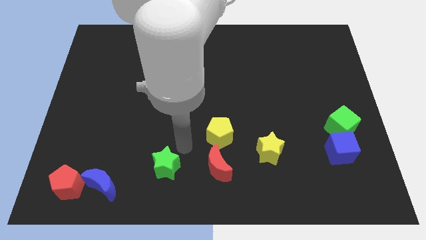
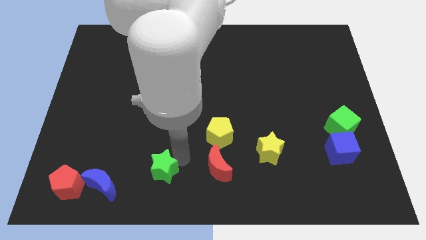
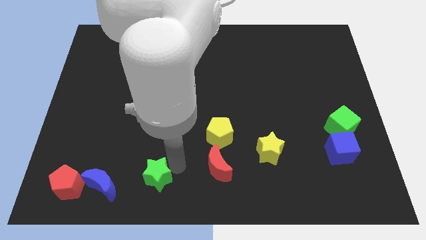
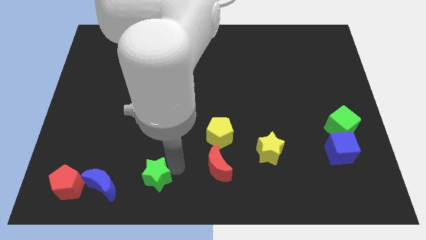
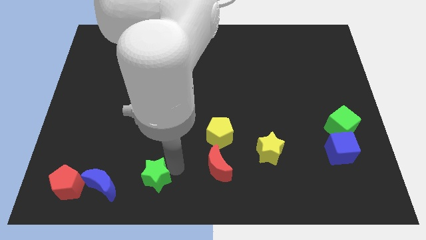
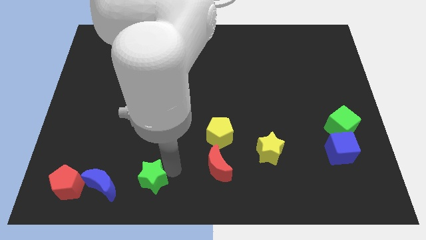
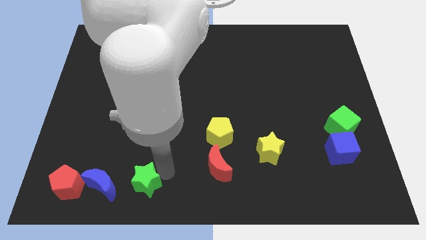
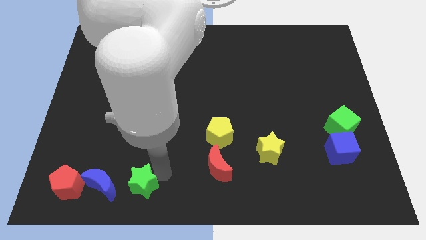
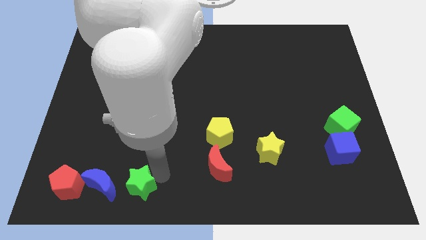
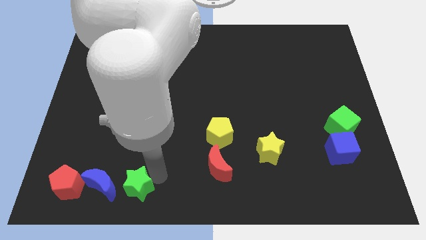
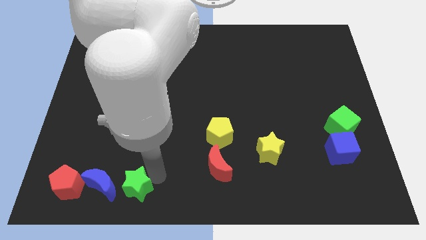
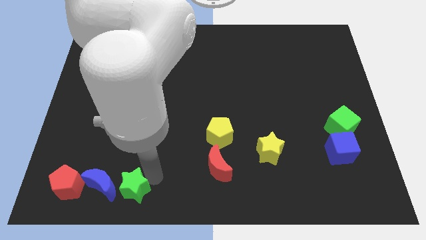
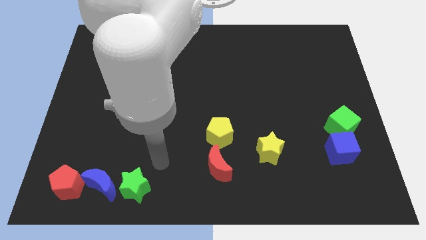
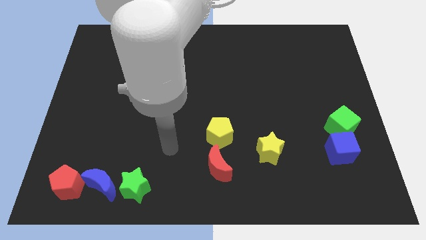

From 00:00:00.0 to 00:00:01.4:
move the green star right to the blue crescent

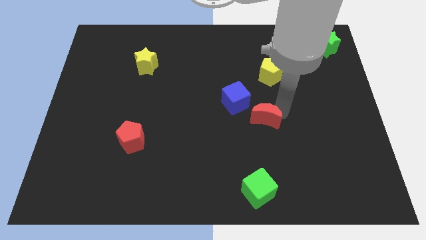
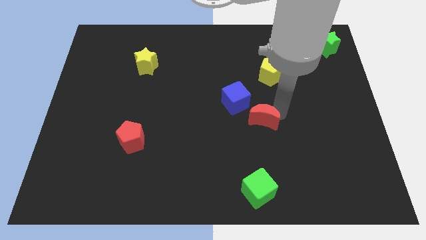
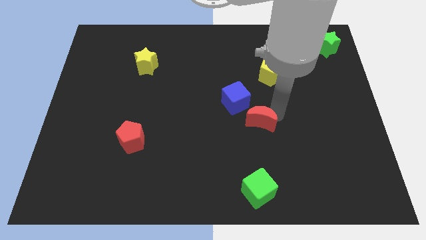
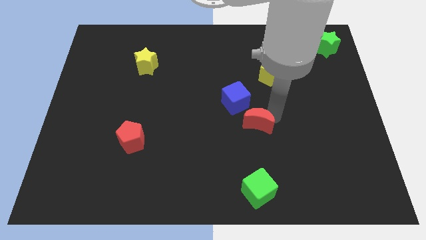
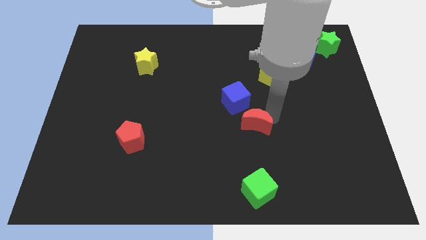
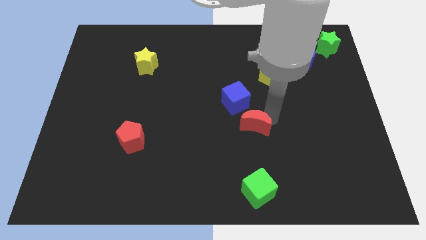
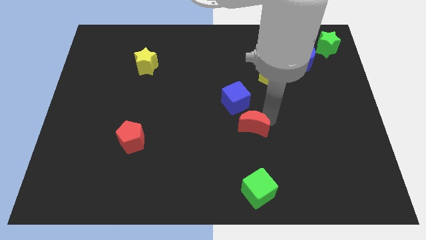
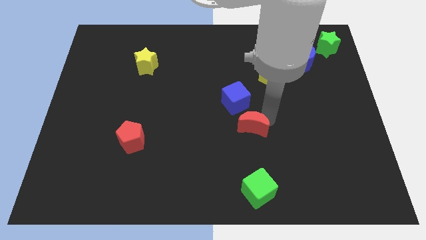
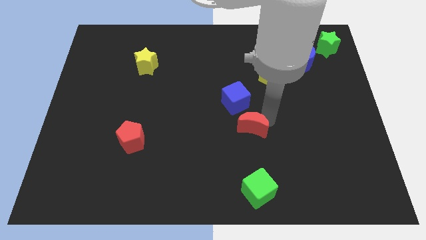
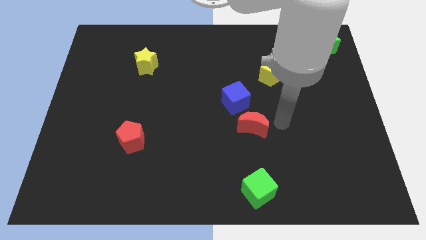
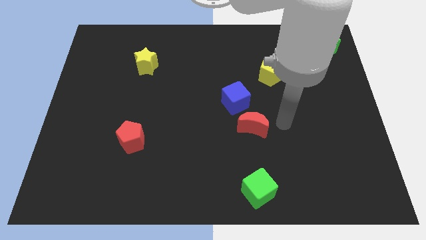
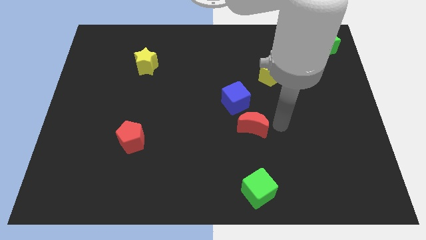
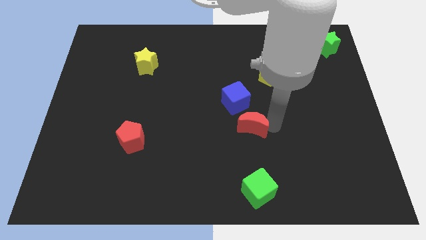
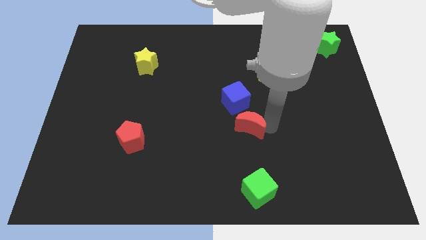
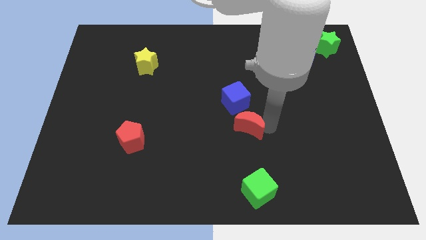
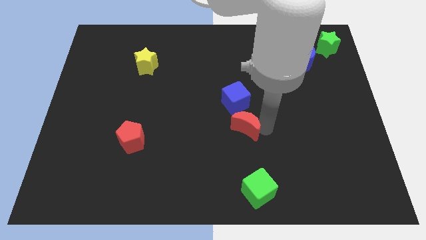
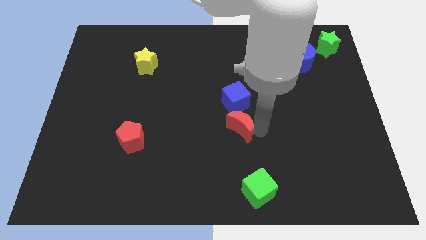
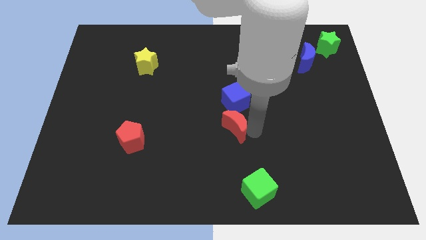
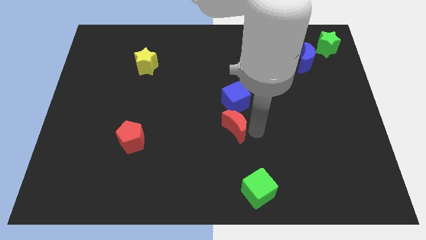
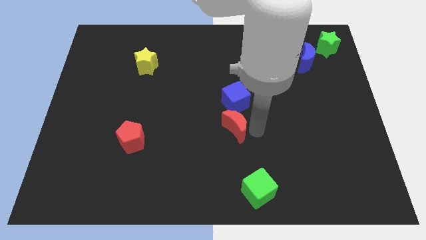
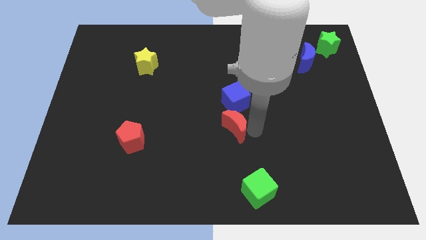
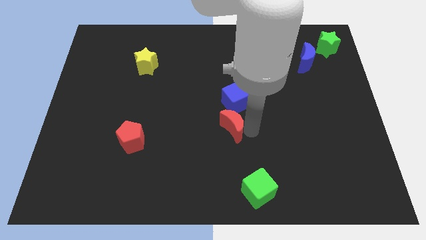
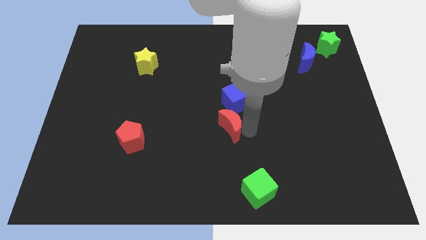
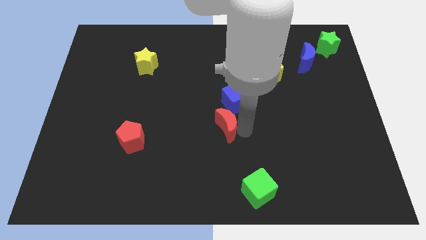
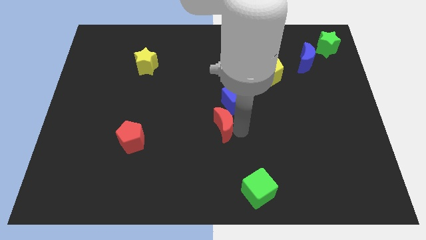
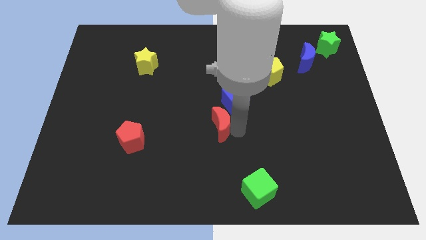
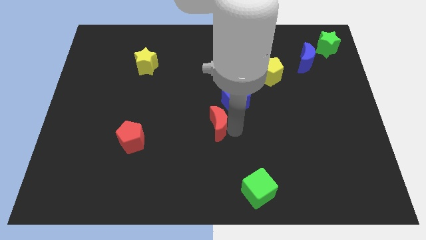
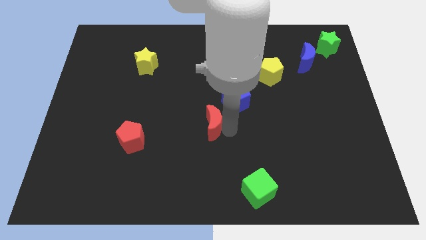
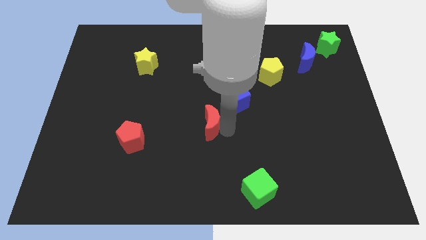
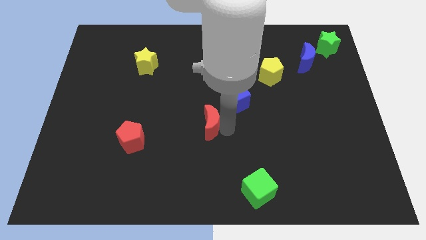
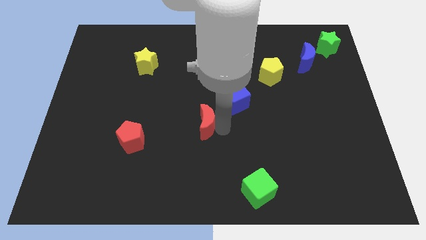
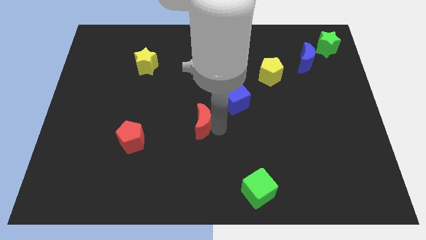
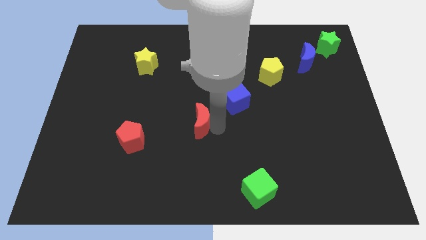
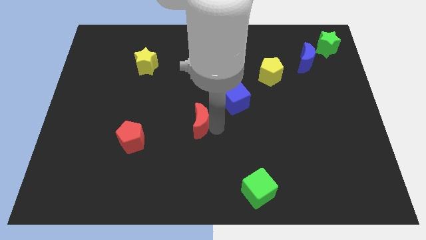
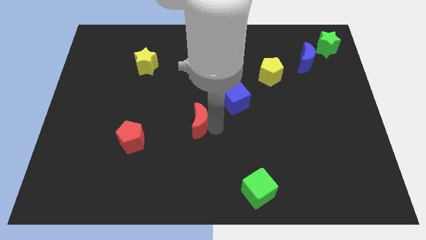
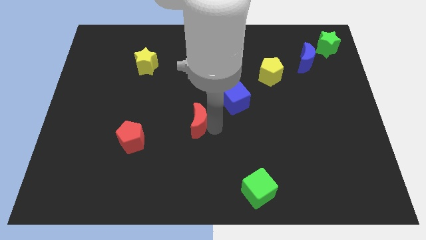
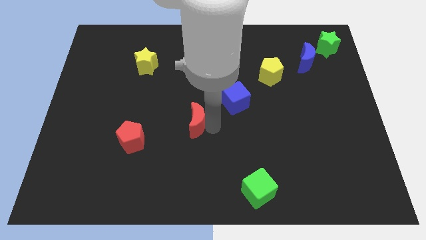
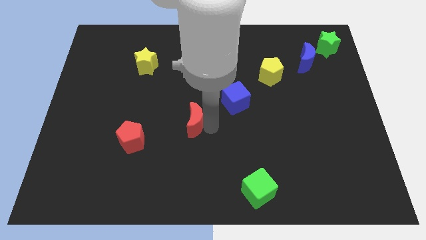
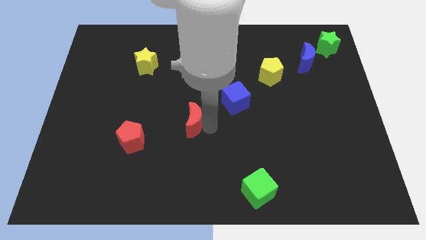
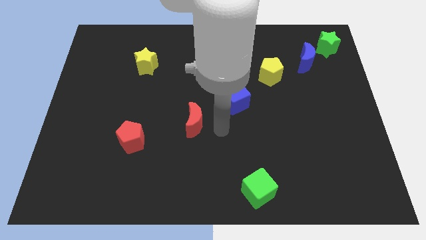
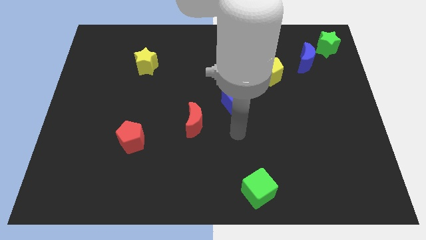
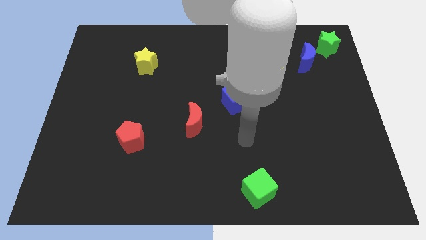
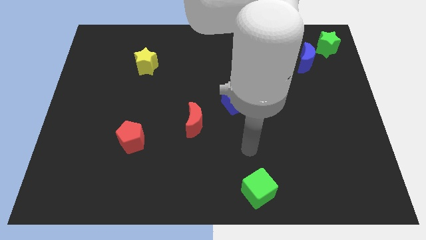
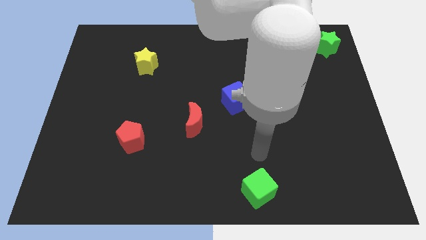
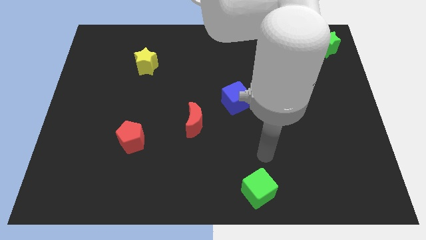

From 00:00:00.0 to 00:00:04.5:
push the red moon in between the red pentagon and blue cube

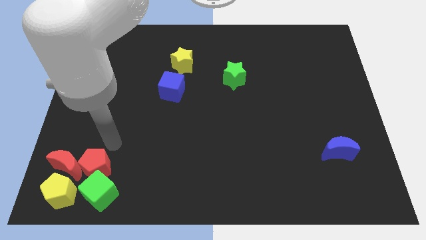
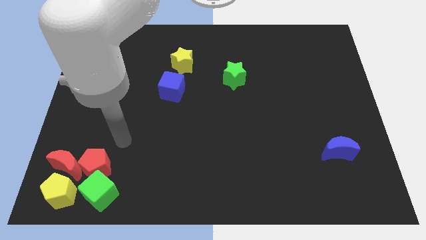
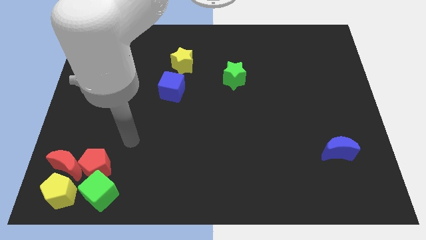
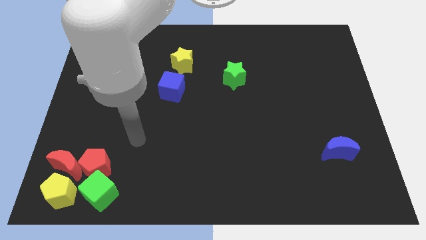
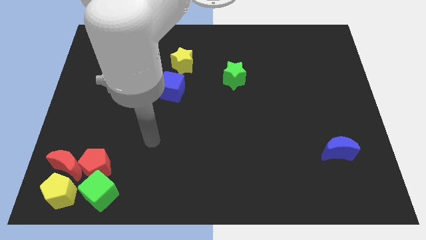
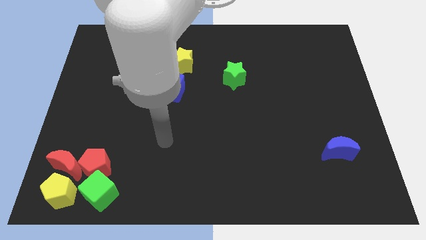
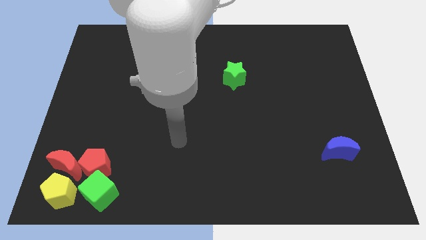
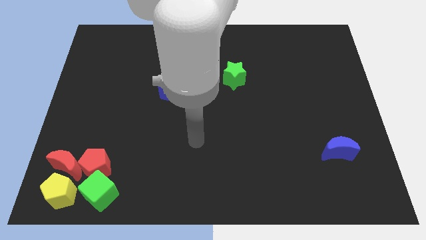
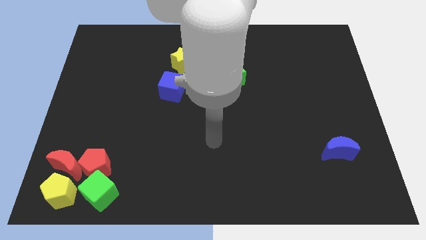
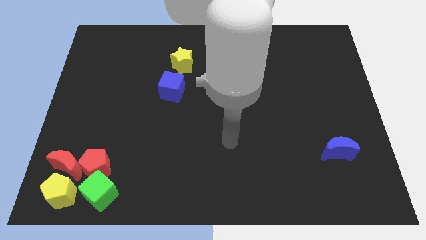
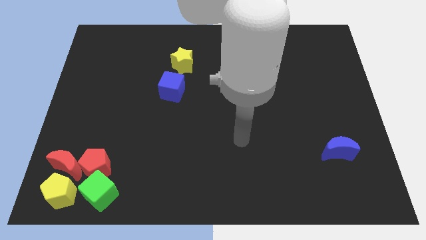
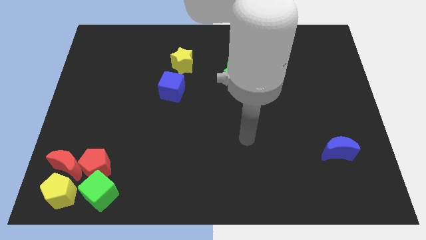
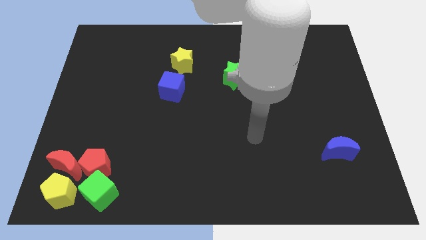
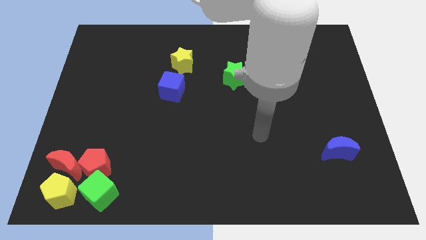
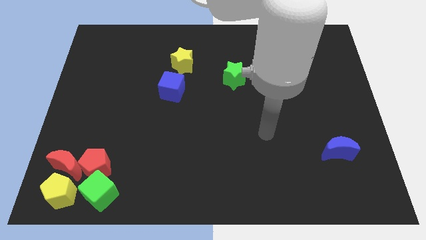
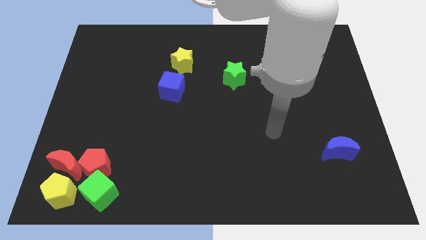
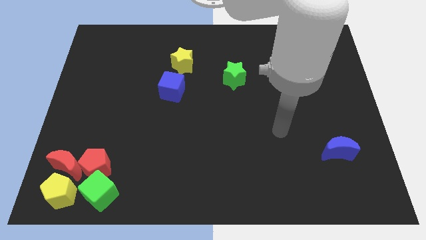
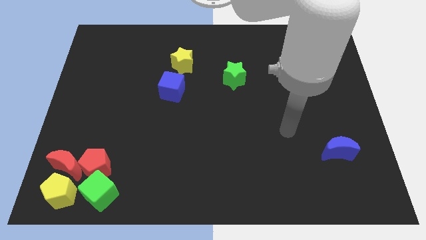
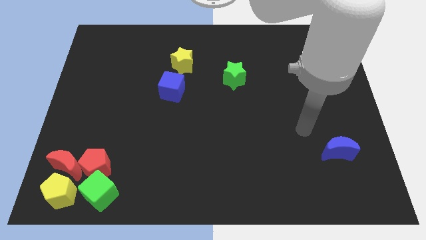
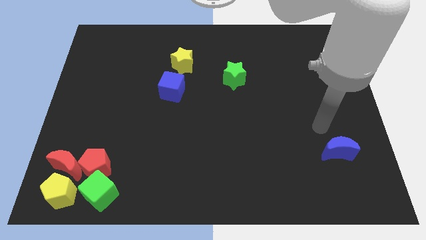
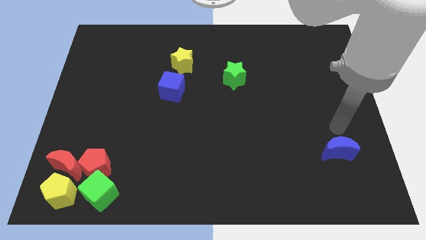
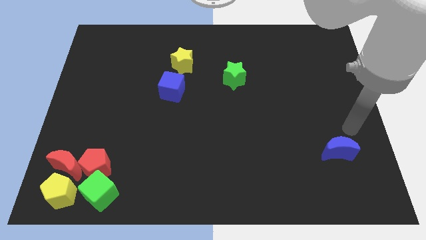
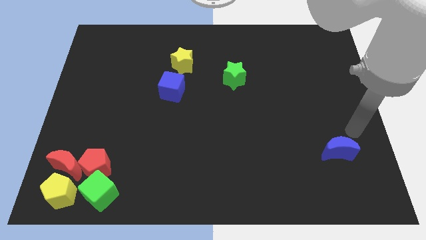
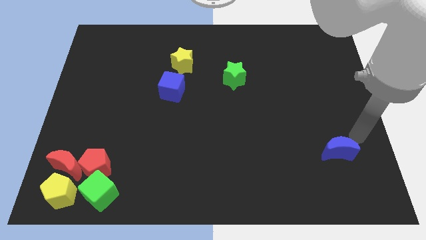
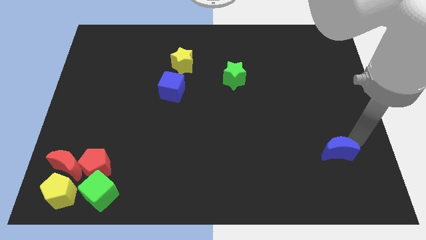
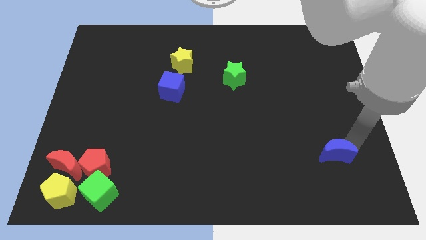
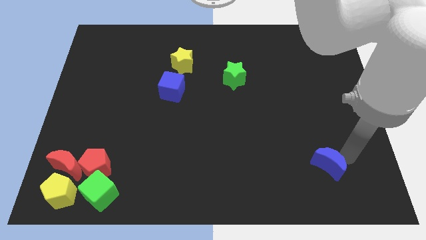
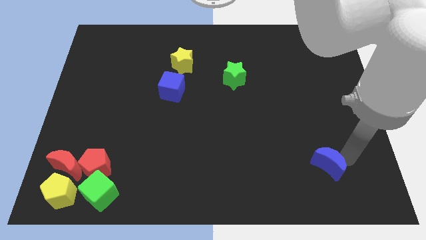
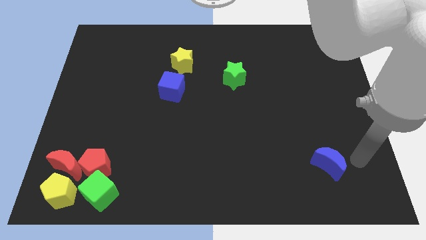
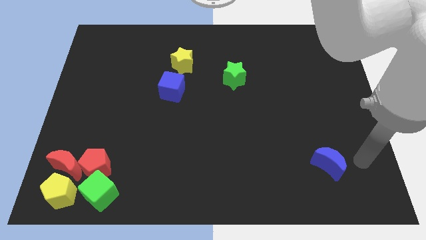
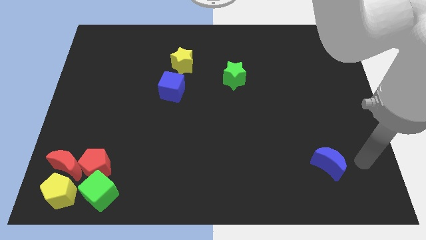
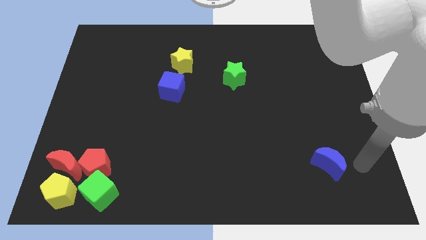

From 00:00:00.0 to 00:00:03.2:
move the blue crescent slightly towards left

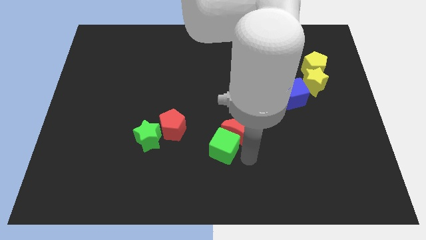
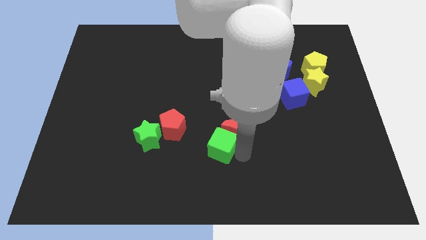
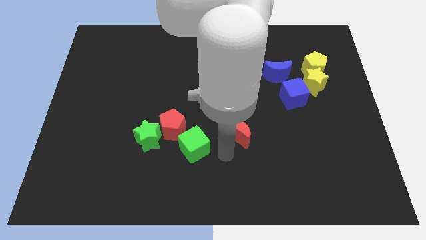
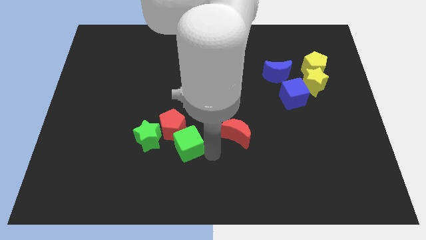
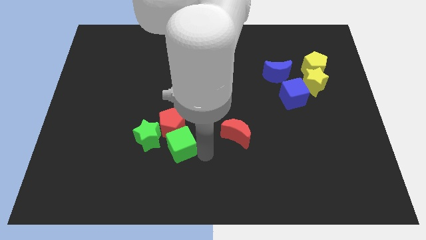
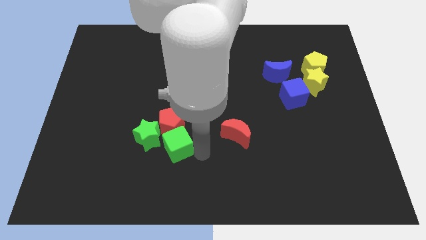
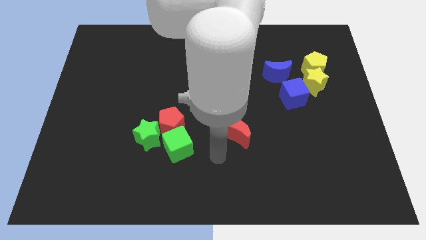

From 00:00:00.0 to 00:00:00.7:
push the green cube into the red pentagon and green star
